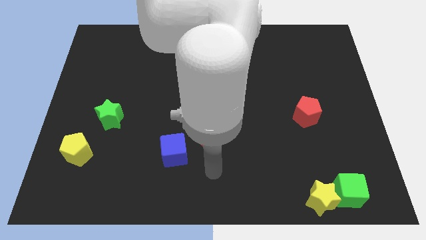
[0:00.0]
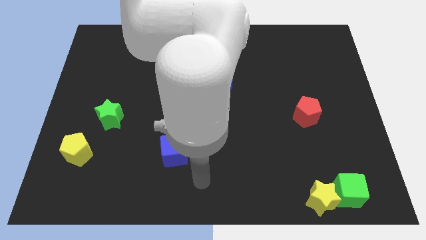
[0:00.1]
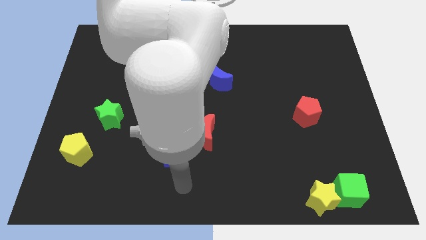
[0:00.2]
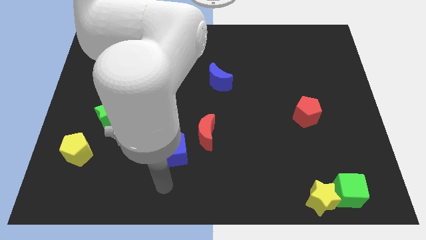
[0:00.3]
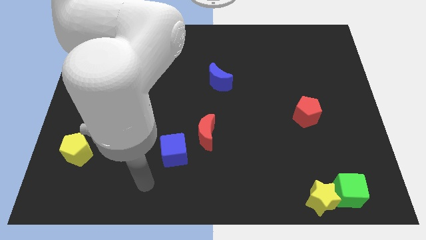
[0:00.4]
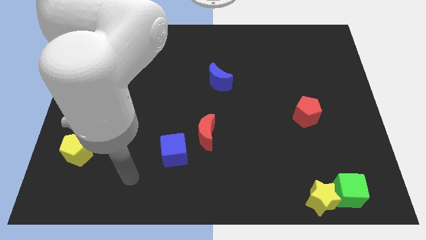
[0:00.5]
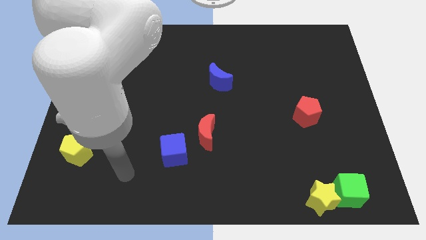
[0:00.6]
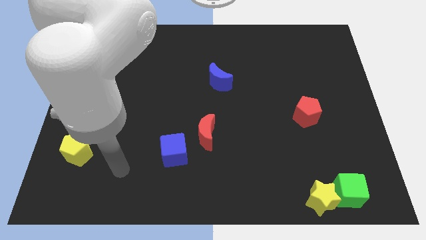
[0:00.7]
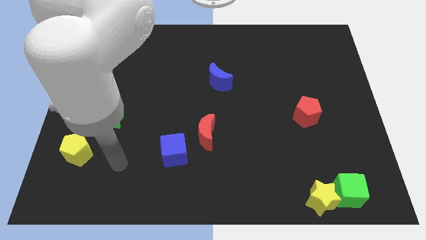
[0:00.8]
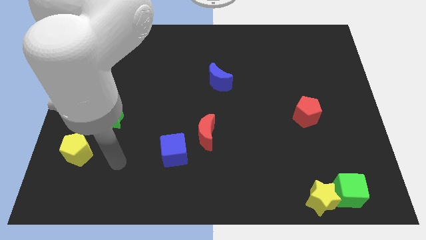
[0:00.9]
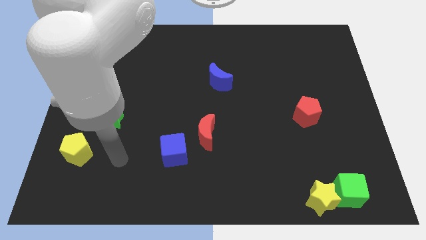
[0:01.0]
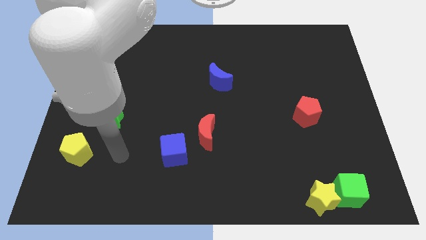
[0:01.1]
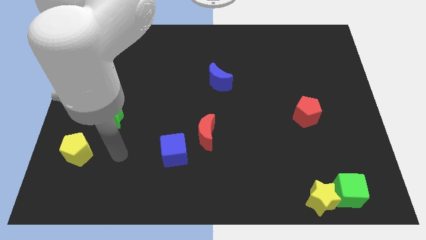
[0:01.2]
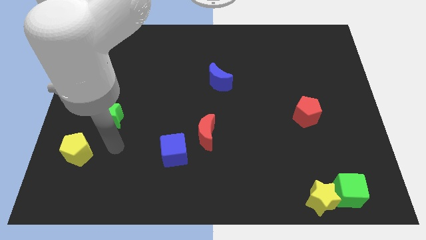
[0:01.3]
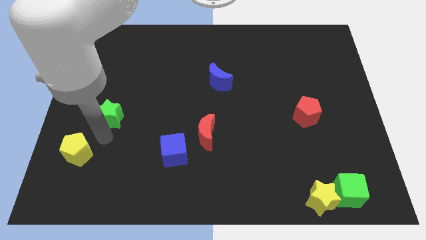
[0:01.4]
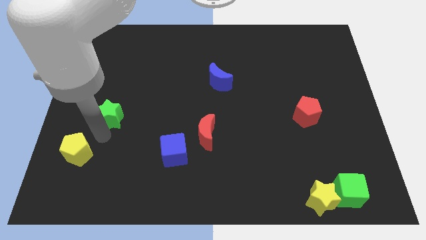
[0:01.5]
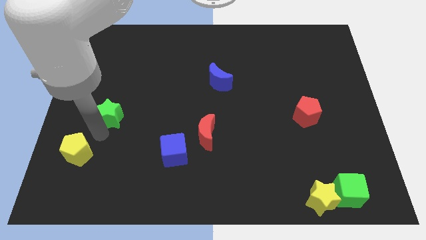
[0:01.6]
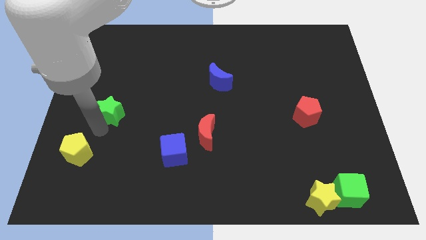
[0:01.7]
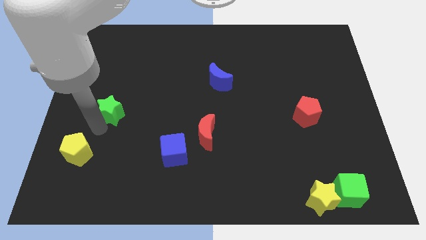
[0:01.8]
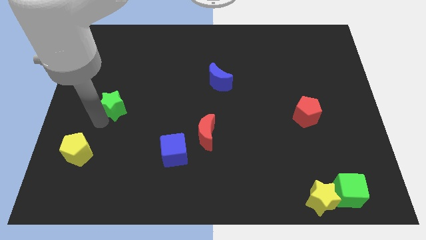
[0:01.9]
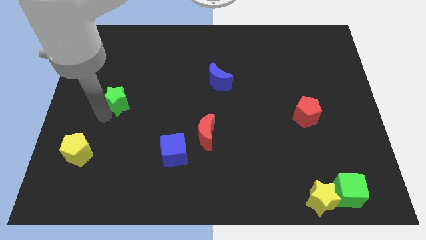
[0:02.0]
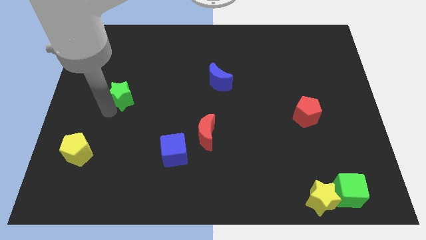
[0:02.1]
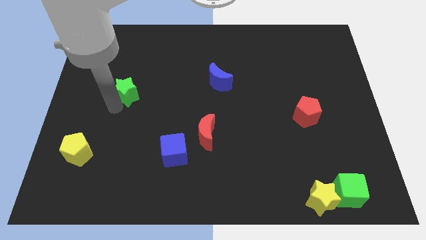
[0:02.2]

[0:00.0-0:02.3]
push the green star slightly to the top

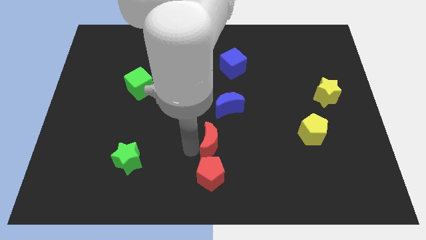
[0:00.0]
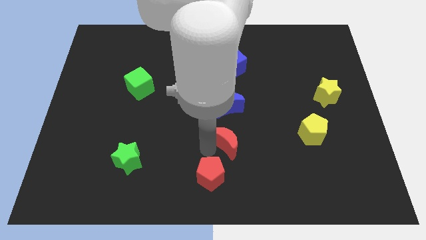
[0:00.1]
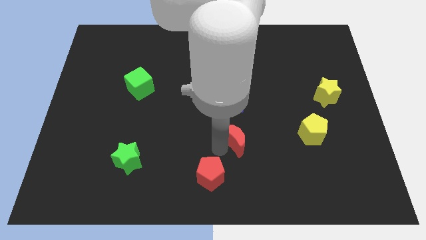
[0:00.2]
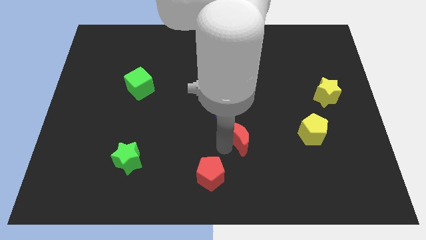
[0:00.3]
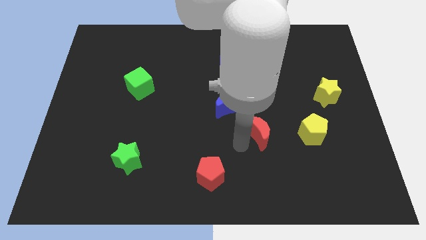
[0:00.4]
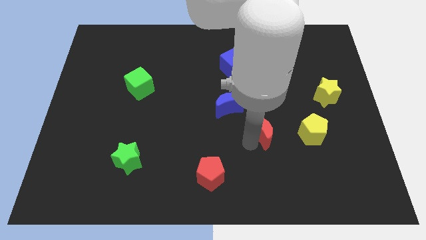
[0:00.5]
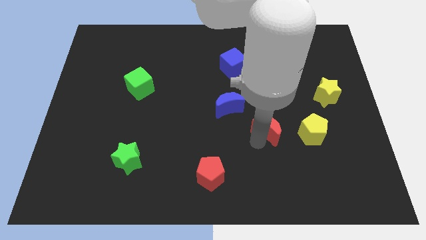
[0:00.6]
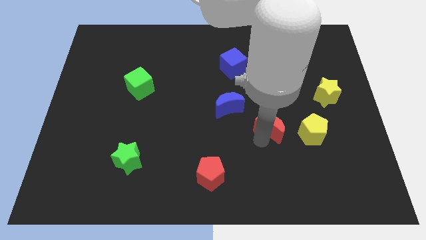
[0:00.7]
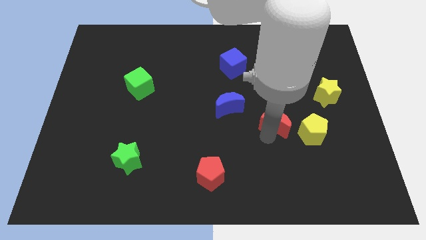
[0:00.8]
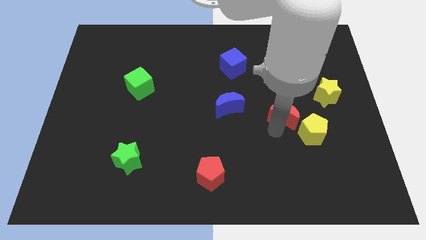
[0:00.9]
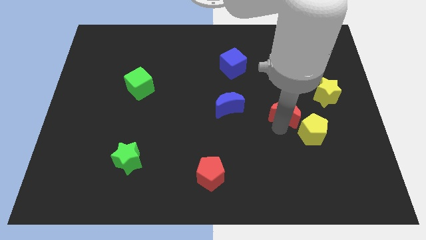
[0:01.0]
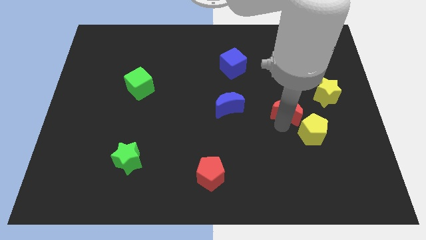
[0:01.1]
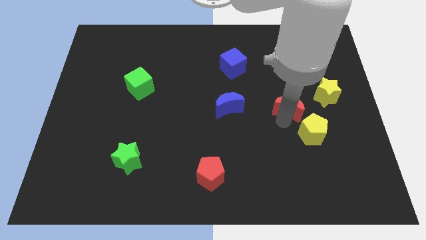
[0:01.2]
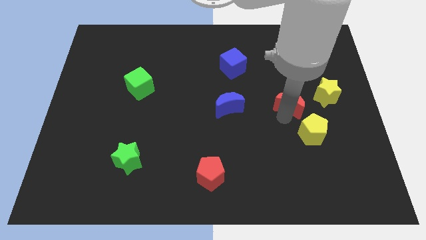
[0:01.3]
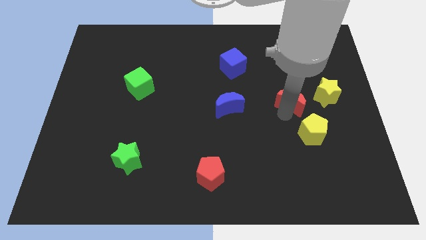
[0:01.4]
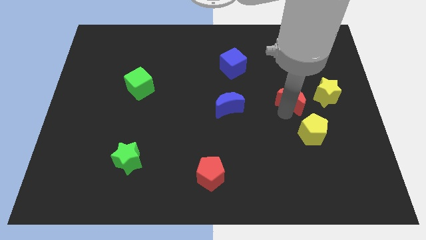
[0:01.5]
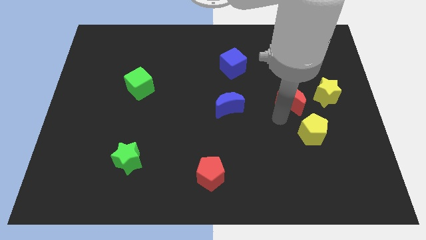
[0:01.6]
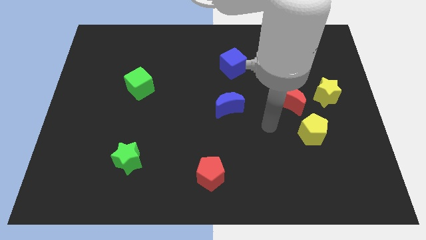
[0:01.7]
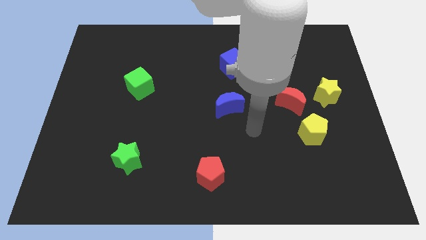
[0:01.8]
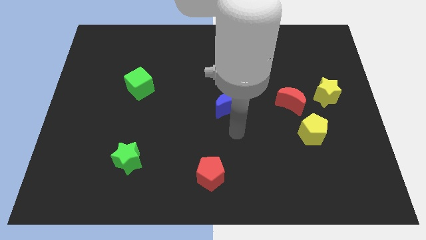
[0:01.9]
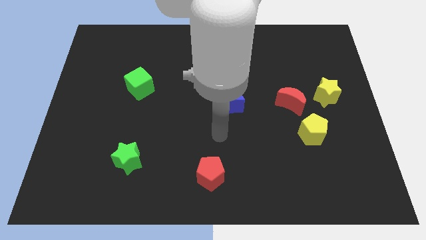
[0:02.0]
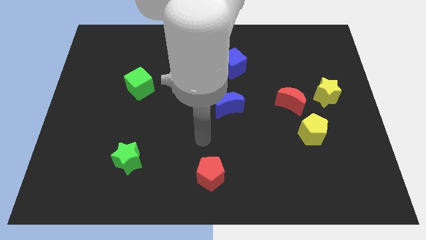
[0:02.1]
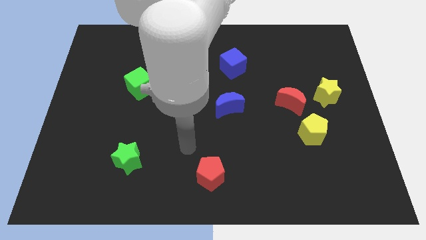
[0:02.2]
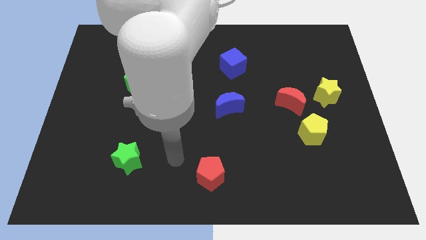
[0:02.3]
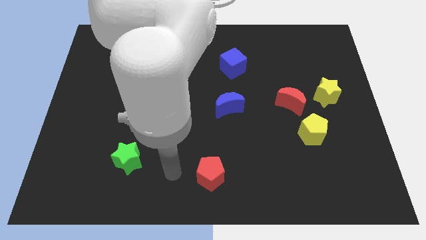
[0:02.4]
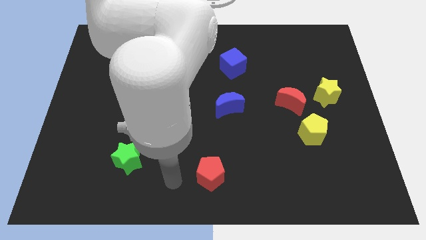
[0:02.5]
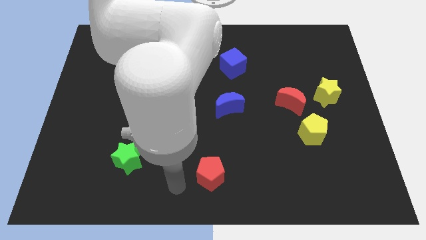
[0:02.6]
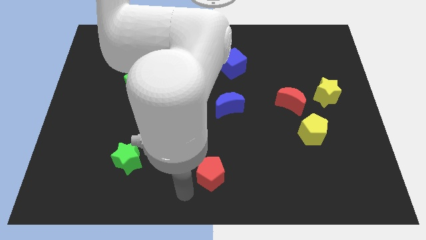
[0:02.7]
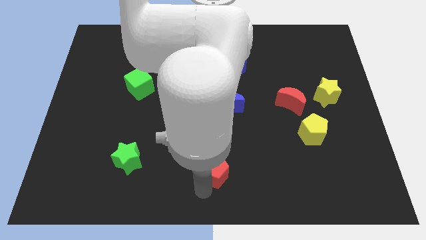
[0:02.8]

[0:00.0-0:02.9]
place the arm near the red pentagon

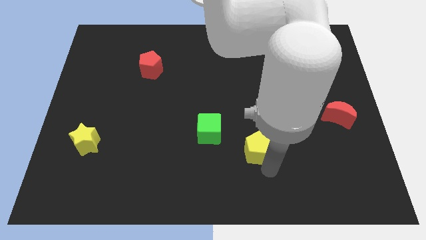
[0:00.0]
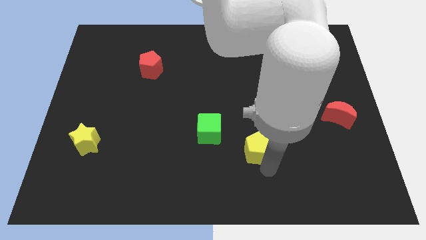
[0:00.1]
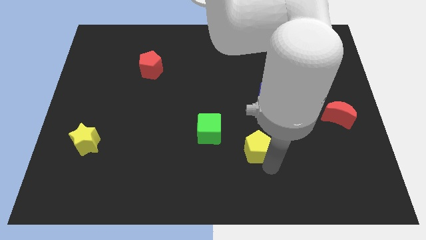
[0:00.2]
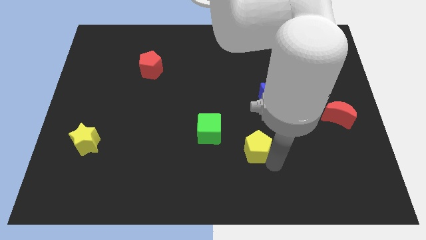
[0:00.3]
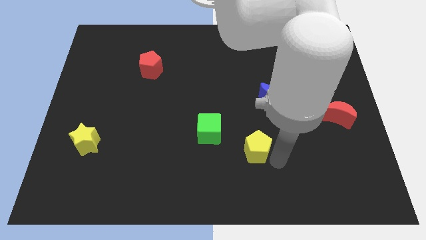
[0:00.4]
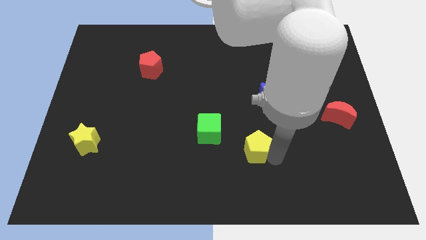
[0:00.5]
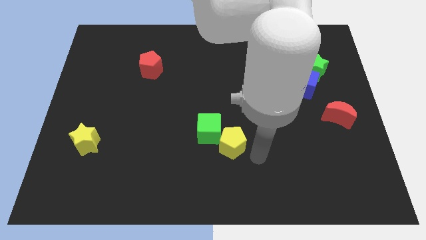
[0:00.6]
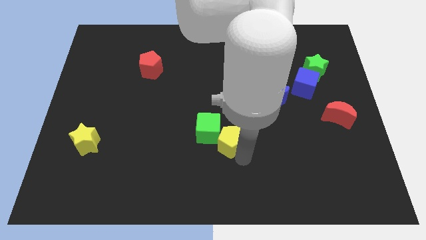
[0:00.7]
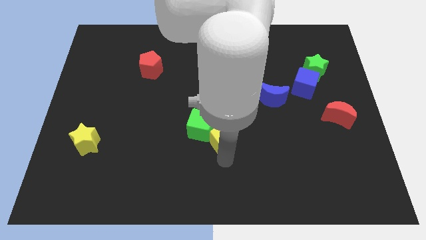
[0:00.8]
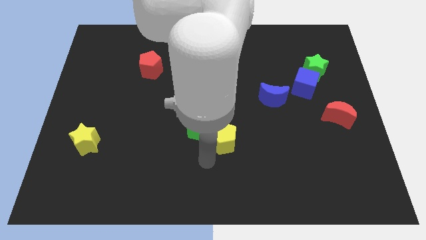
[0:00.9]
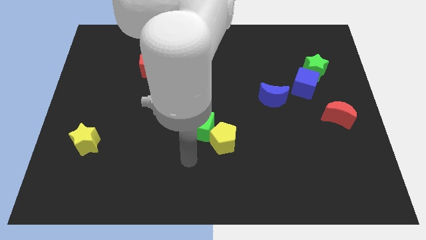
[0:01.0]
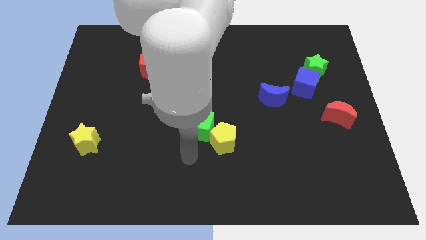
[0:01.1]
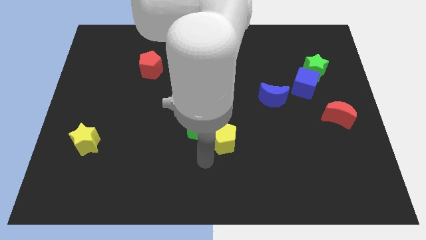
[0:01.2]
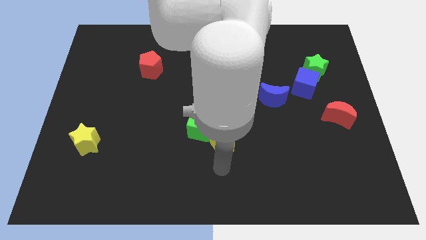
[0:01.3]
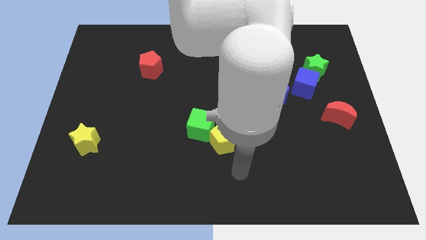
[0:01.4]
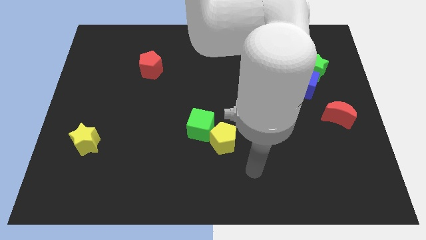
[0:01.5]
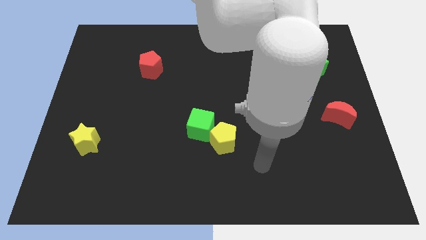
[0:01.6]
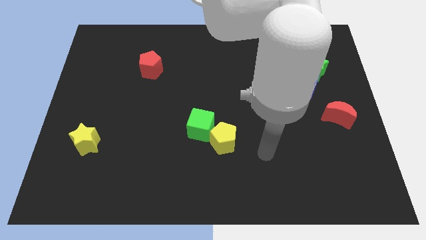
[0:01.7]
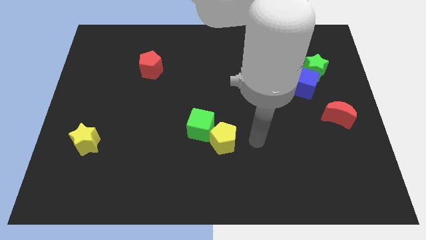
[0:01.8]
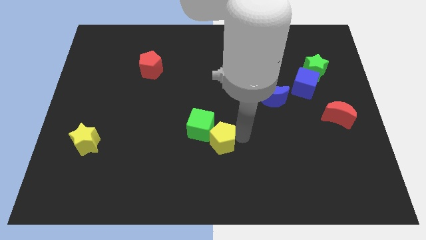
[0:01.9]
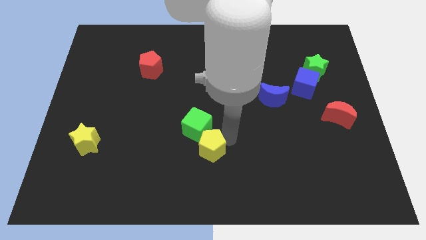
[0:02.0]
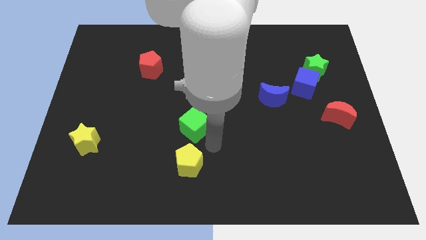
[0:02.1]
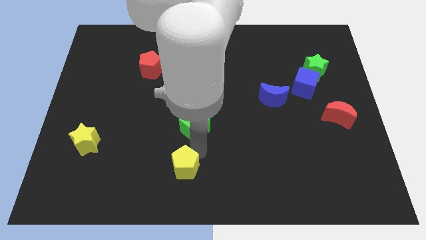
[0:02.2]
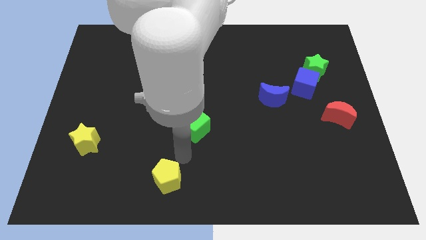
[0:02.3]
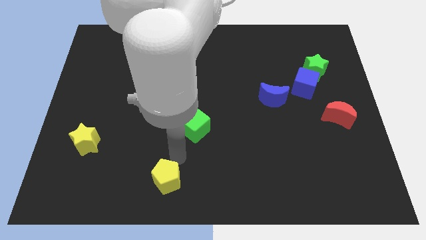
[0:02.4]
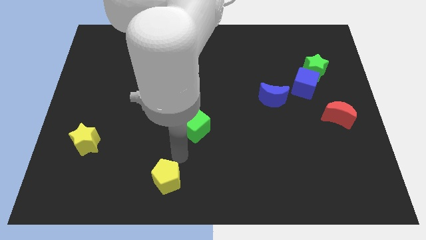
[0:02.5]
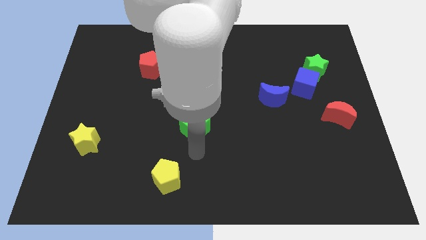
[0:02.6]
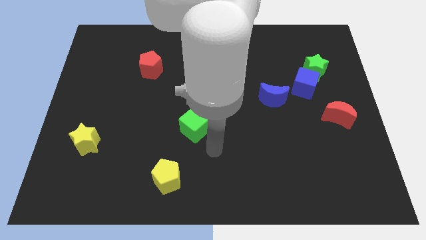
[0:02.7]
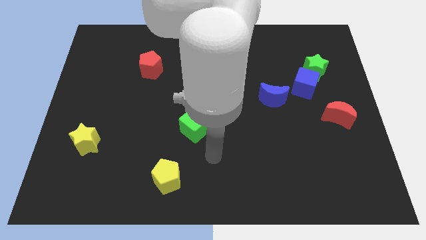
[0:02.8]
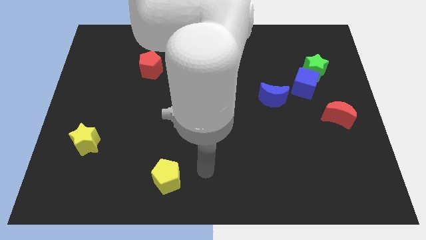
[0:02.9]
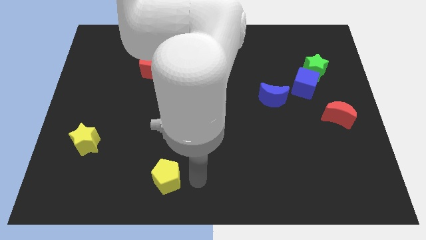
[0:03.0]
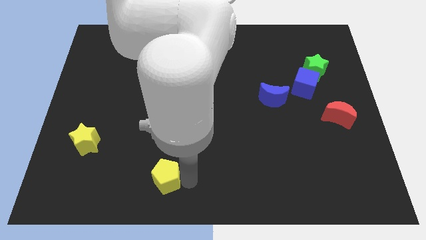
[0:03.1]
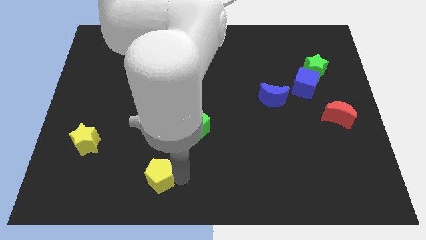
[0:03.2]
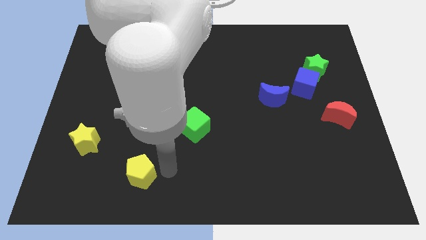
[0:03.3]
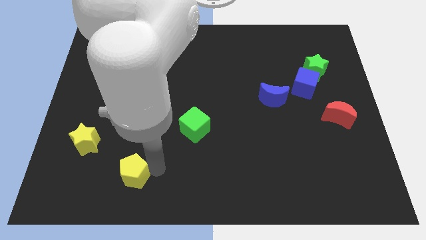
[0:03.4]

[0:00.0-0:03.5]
push the yellow pentagon to the bottom left of the green cube

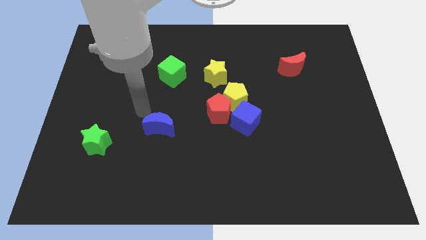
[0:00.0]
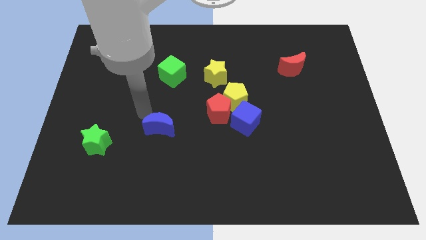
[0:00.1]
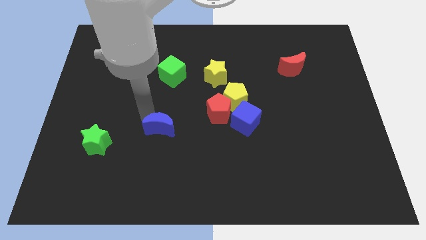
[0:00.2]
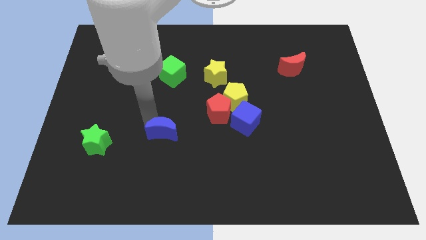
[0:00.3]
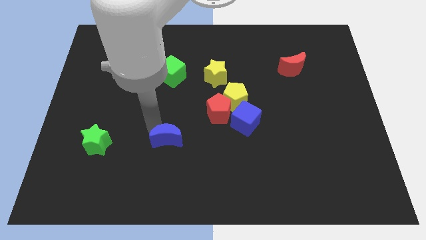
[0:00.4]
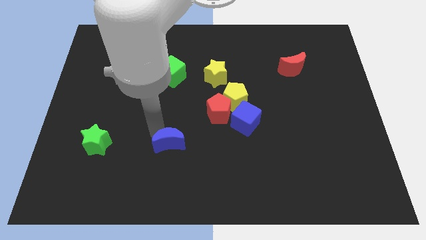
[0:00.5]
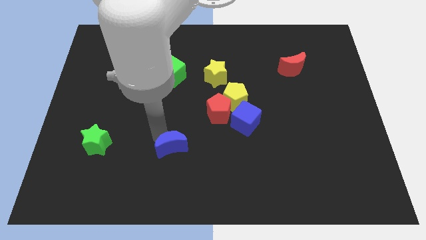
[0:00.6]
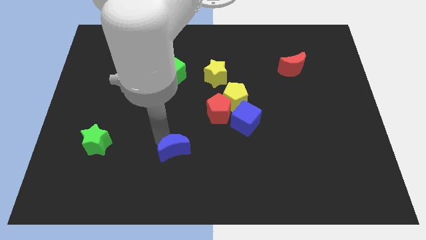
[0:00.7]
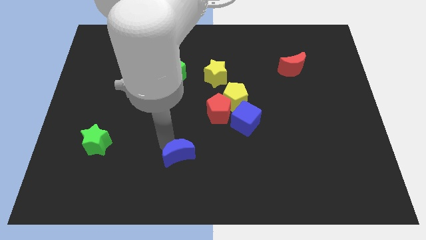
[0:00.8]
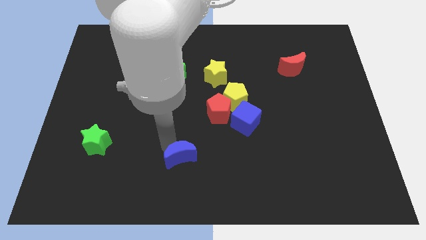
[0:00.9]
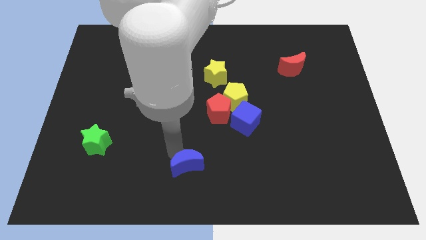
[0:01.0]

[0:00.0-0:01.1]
push blue crescent slightly towards down
